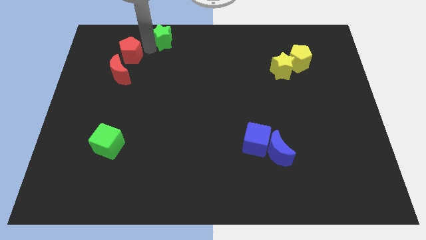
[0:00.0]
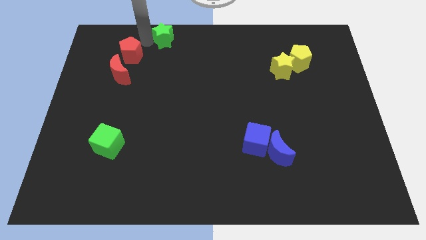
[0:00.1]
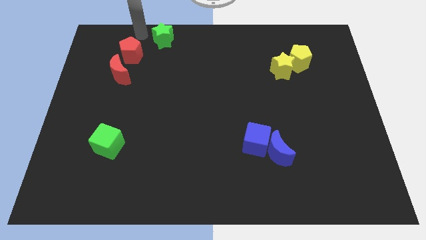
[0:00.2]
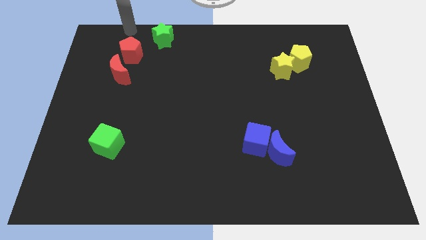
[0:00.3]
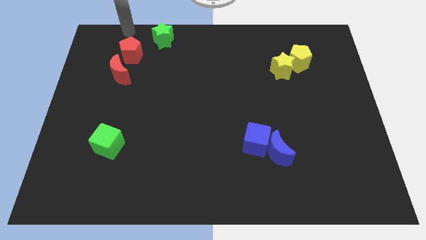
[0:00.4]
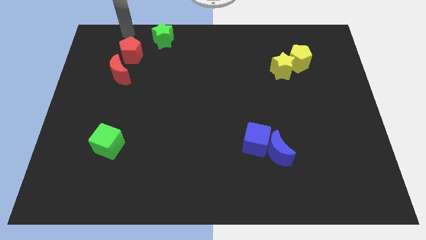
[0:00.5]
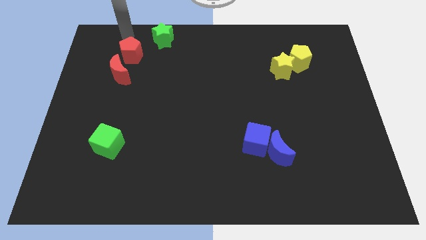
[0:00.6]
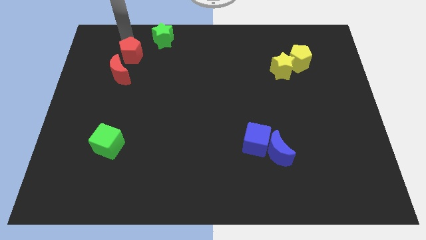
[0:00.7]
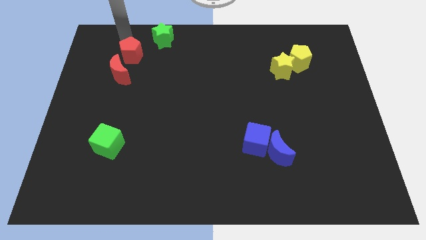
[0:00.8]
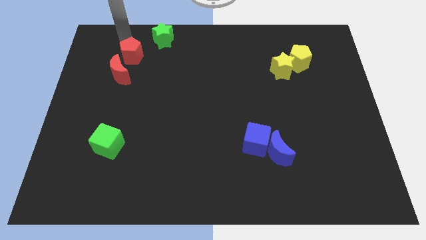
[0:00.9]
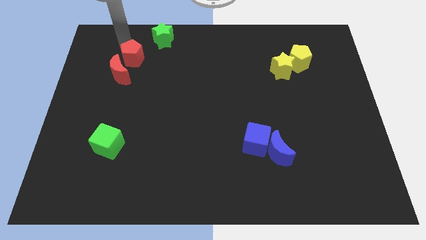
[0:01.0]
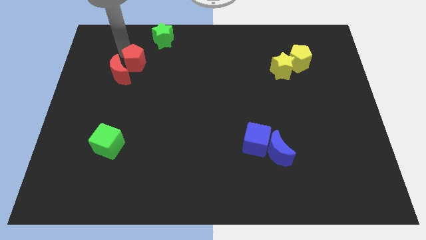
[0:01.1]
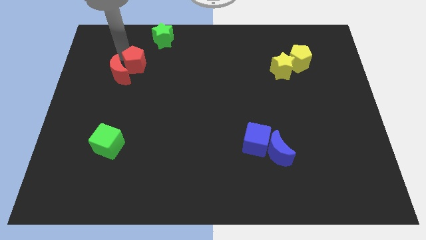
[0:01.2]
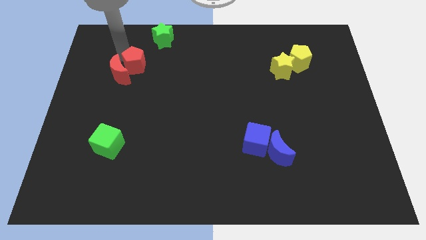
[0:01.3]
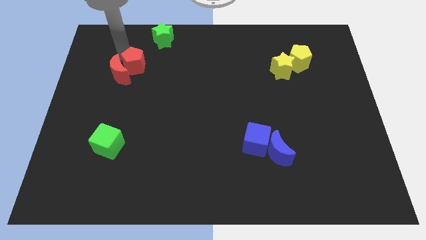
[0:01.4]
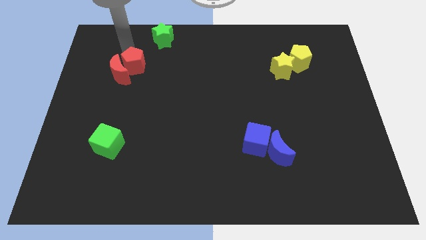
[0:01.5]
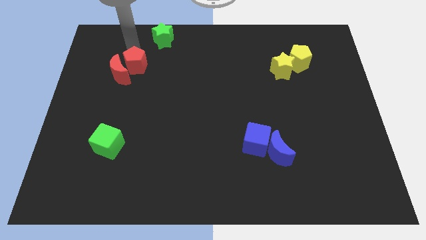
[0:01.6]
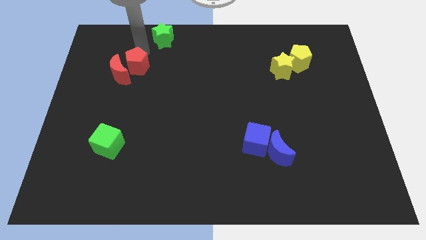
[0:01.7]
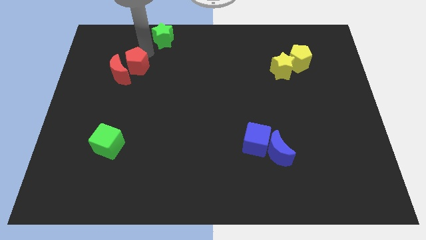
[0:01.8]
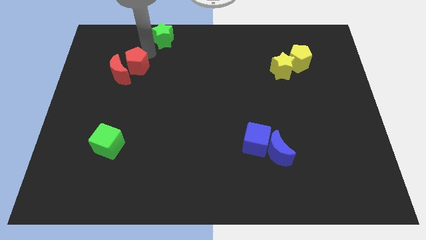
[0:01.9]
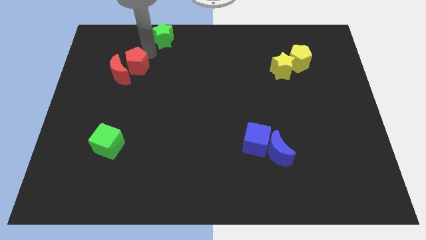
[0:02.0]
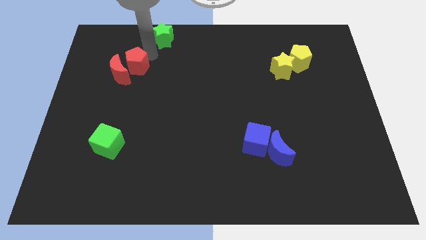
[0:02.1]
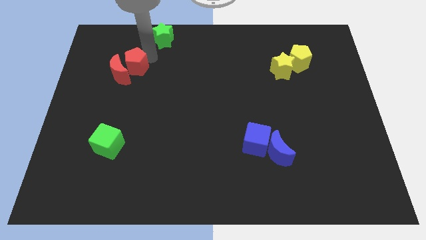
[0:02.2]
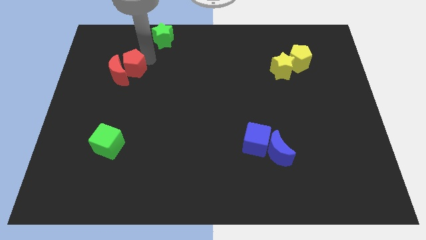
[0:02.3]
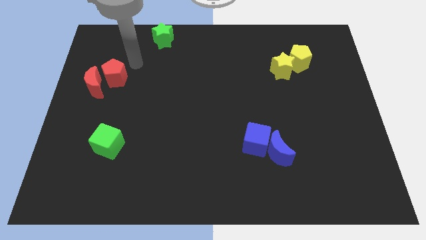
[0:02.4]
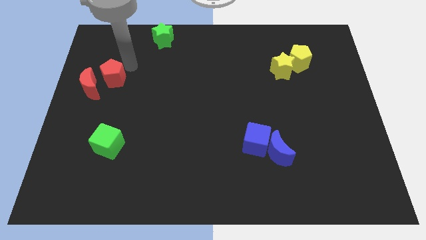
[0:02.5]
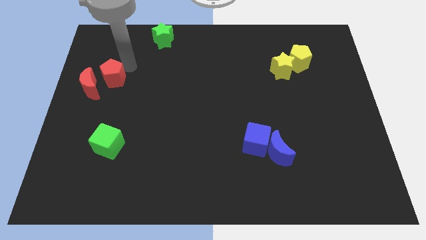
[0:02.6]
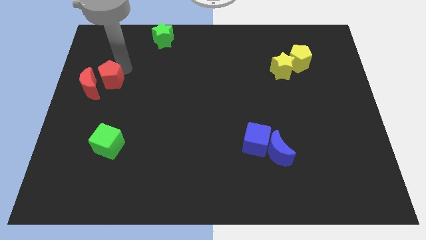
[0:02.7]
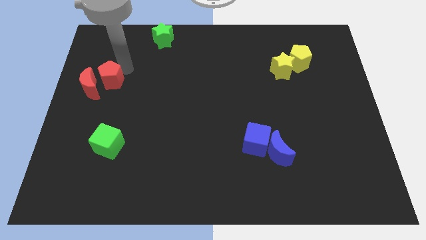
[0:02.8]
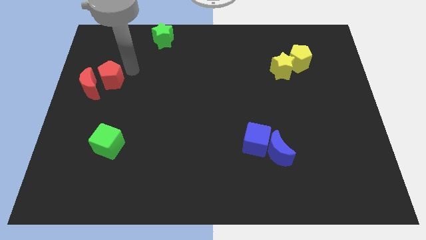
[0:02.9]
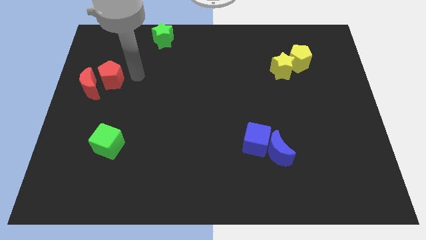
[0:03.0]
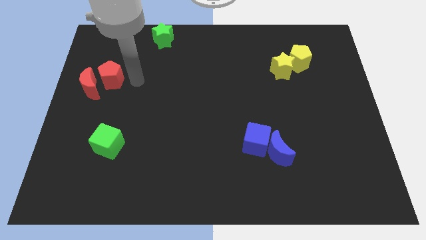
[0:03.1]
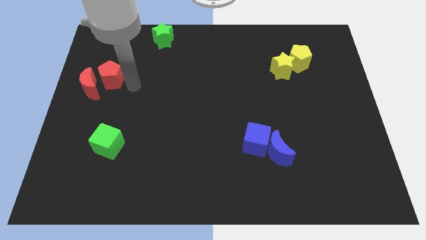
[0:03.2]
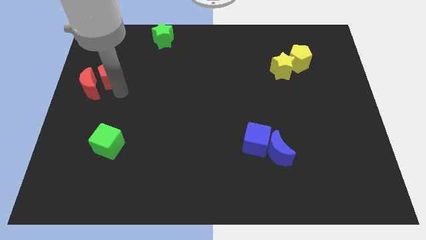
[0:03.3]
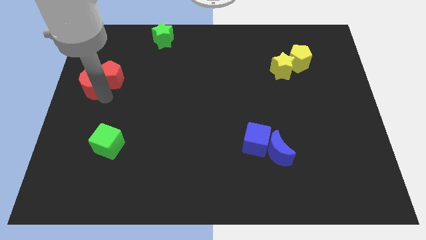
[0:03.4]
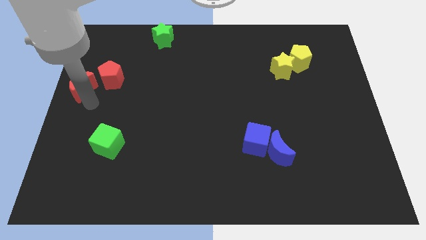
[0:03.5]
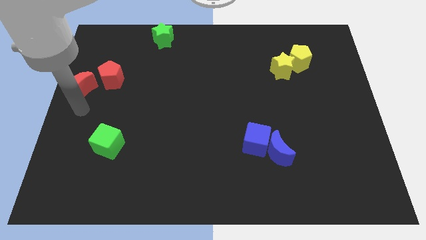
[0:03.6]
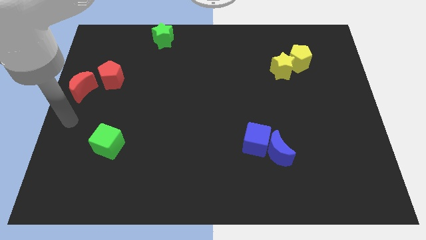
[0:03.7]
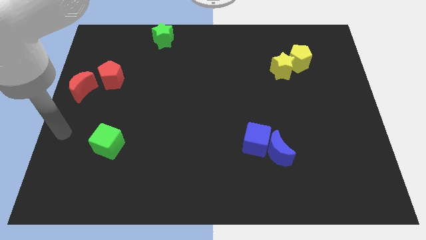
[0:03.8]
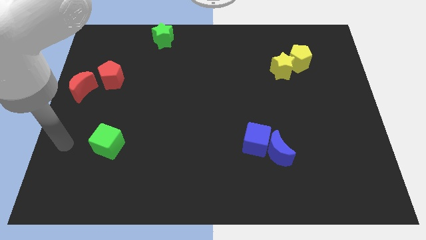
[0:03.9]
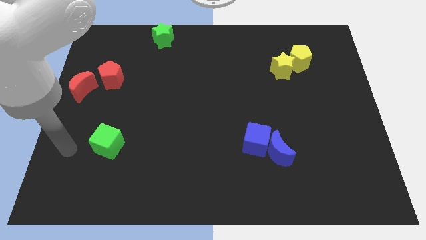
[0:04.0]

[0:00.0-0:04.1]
slide the red blocks to the left side of the table

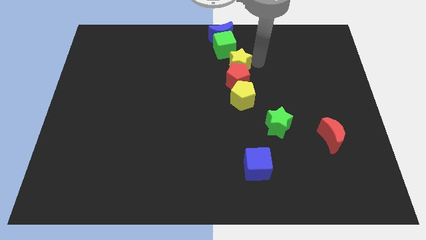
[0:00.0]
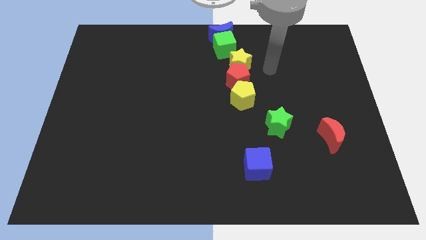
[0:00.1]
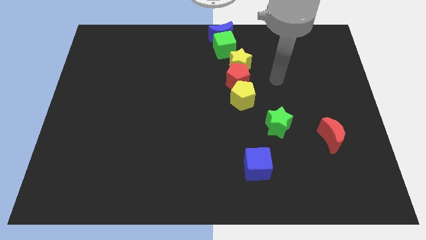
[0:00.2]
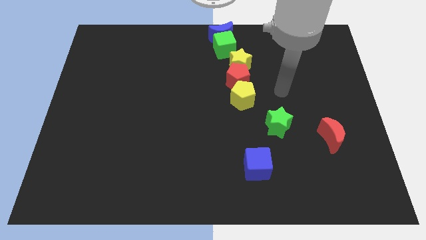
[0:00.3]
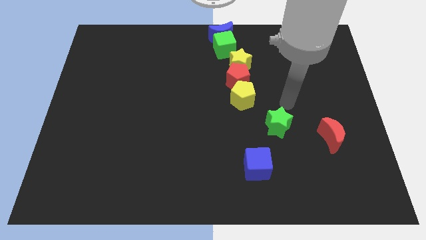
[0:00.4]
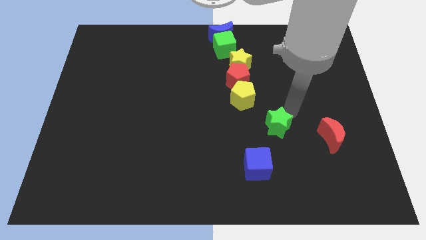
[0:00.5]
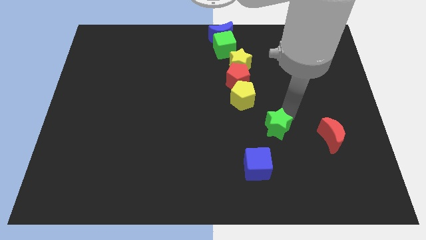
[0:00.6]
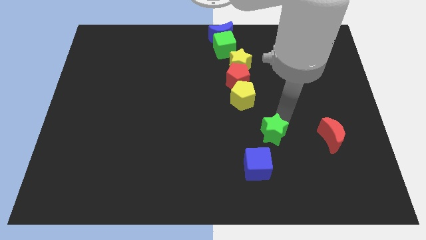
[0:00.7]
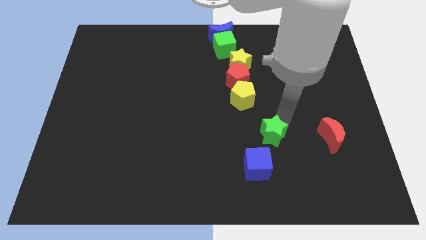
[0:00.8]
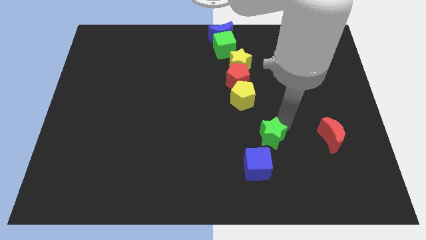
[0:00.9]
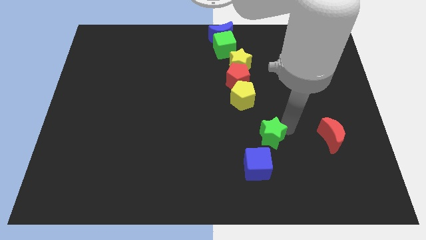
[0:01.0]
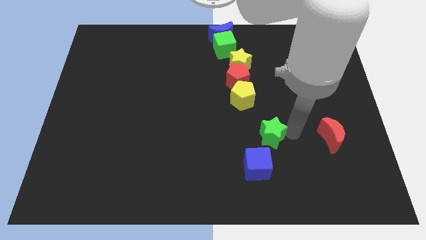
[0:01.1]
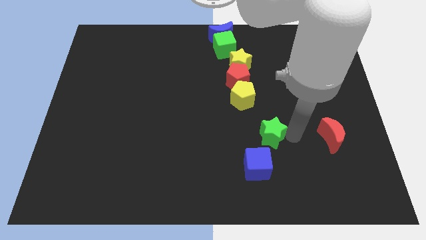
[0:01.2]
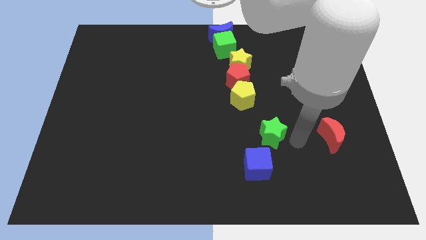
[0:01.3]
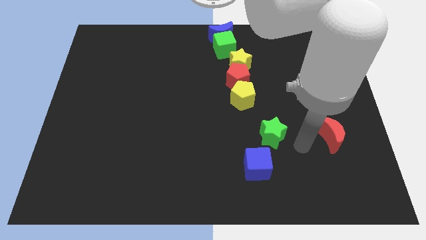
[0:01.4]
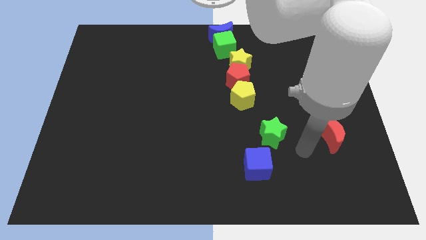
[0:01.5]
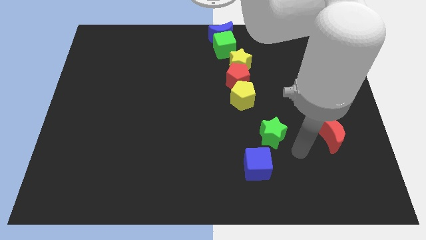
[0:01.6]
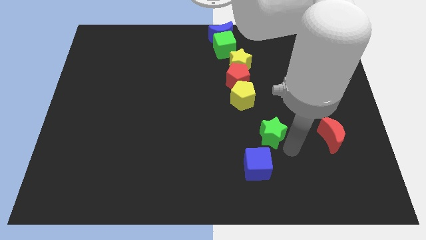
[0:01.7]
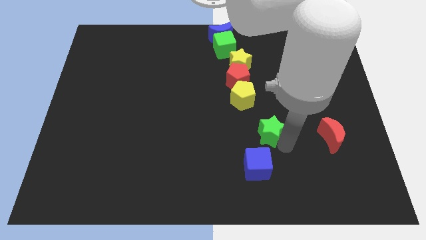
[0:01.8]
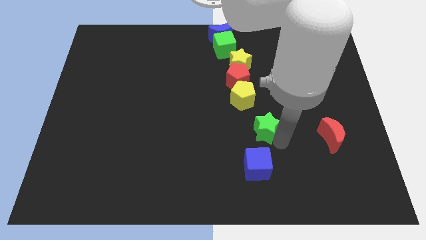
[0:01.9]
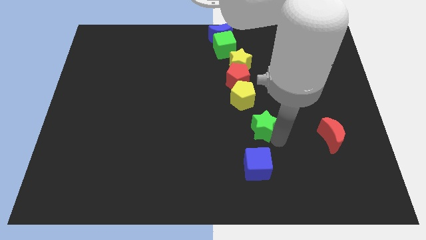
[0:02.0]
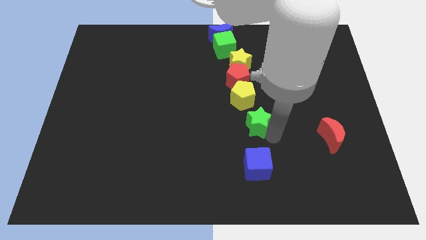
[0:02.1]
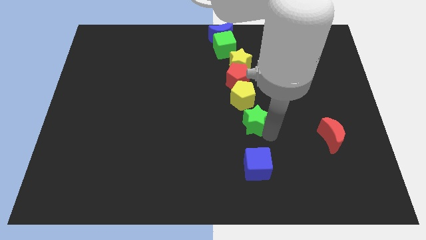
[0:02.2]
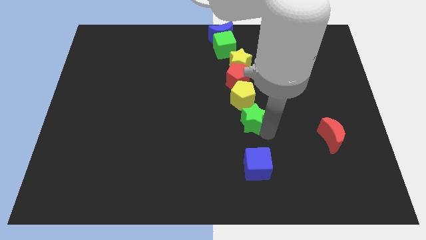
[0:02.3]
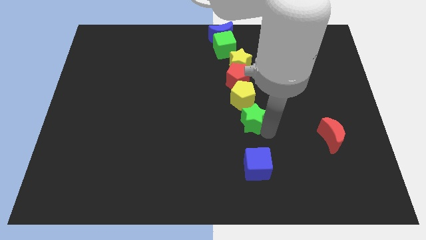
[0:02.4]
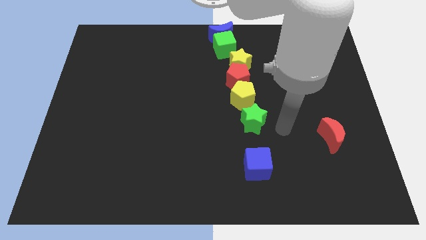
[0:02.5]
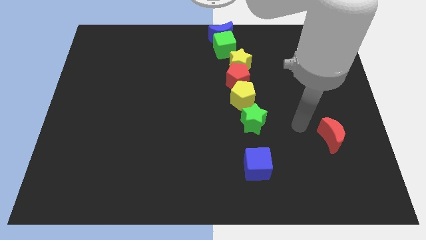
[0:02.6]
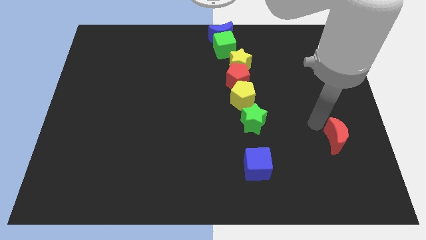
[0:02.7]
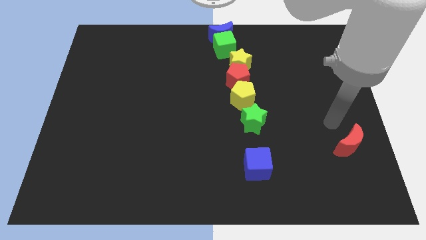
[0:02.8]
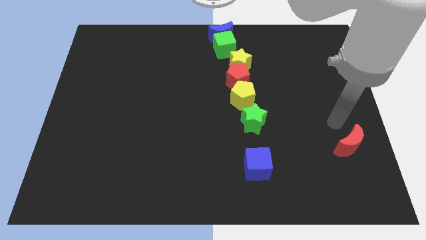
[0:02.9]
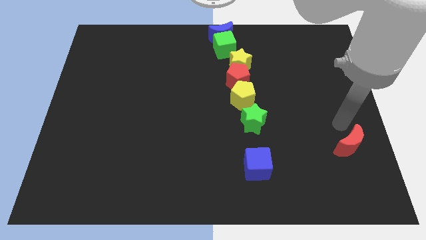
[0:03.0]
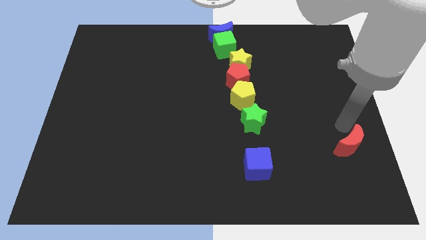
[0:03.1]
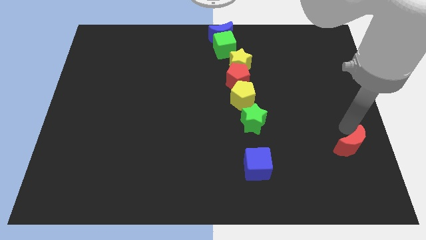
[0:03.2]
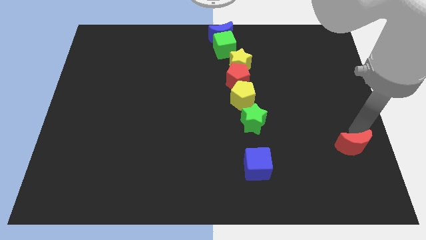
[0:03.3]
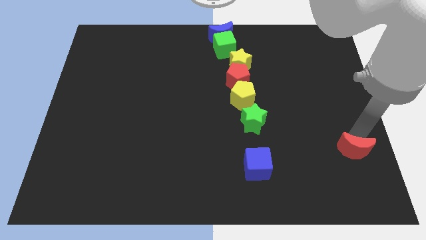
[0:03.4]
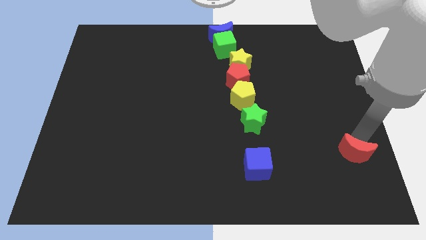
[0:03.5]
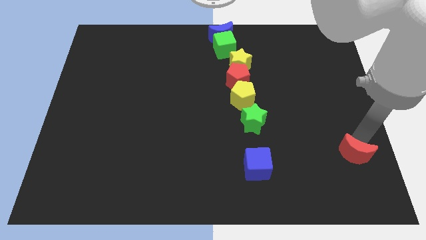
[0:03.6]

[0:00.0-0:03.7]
arrange the green star and red crescent diagonal to each other

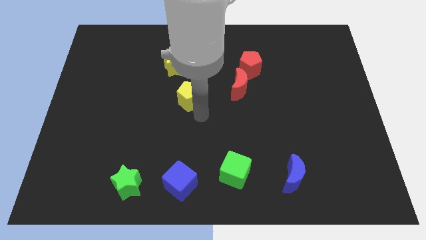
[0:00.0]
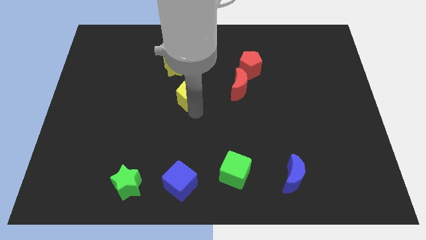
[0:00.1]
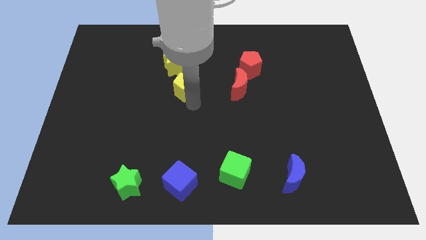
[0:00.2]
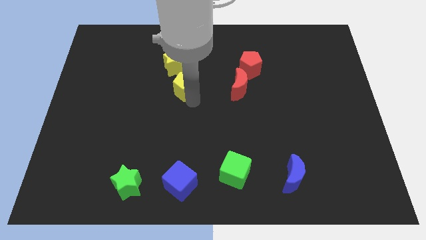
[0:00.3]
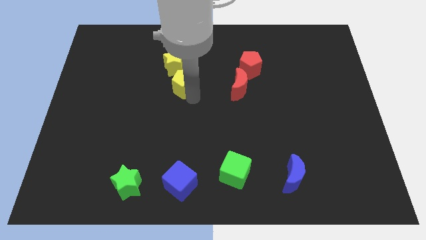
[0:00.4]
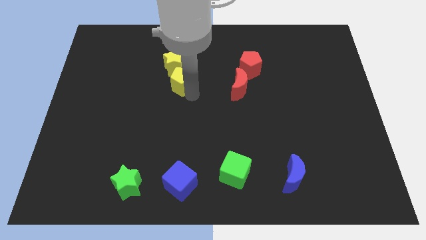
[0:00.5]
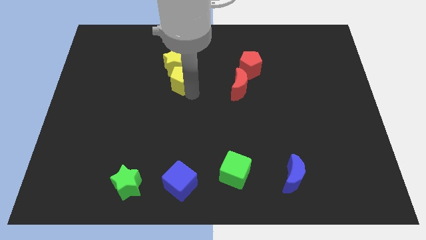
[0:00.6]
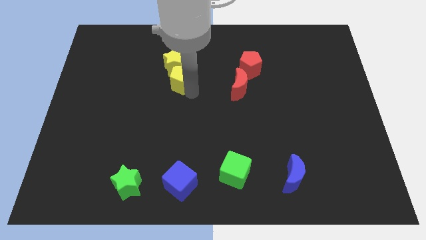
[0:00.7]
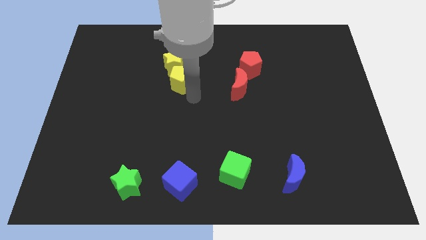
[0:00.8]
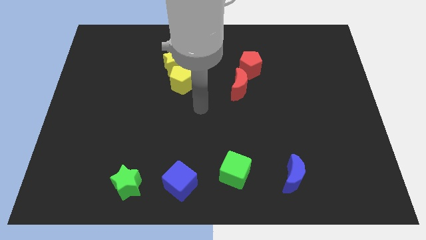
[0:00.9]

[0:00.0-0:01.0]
push the yellow pentagon towards the bottom of the yellow star
